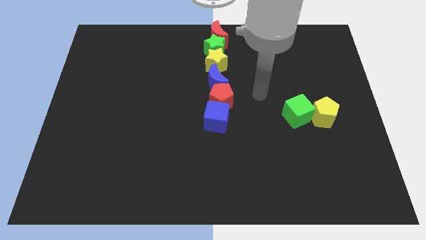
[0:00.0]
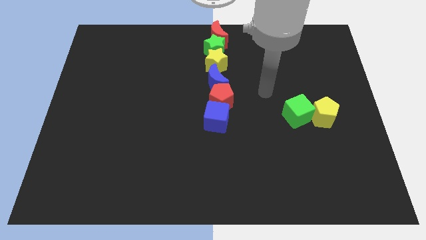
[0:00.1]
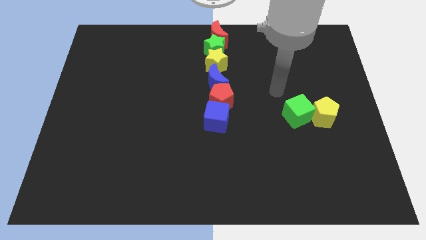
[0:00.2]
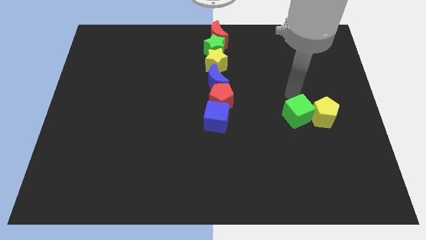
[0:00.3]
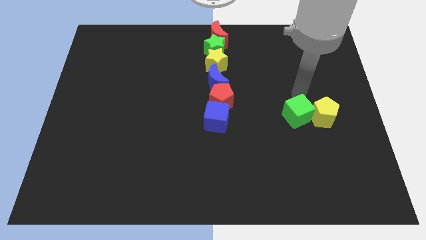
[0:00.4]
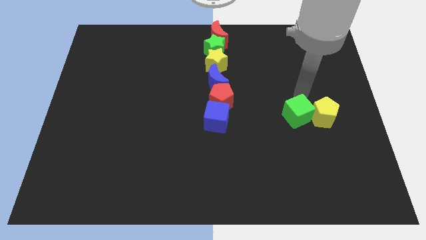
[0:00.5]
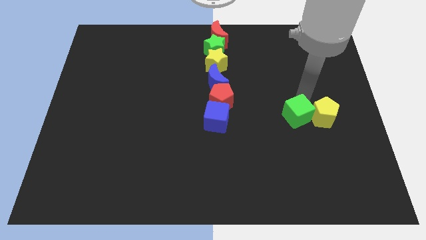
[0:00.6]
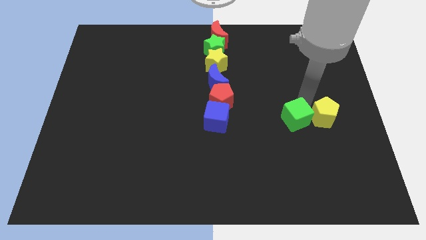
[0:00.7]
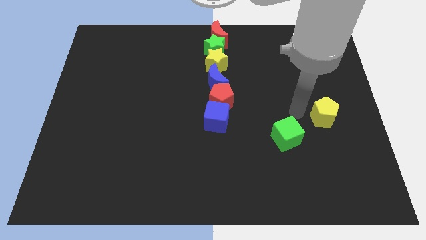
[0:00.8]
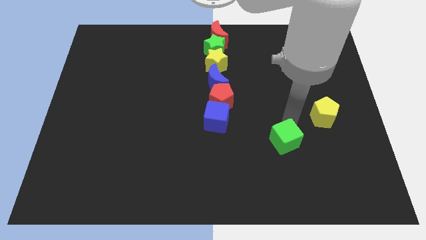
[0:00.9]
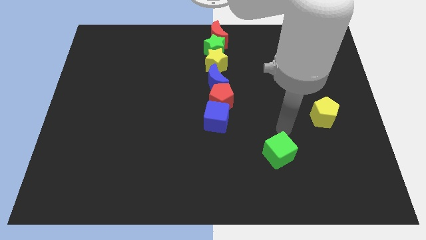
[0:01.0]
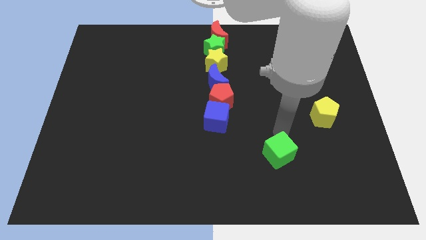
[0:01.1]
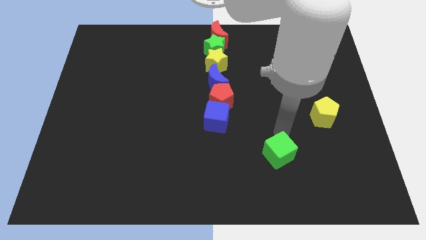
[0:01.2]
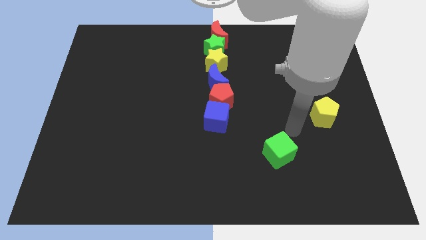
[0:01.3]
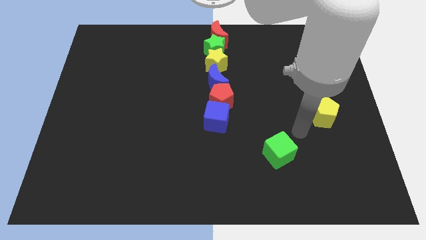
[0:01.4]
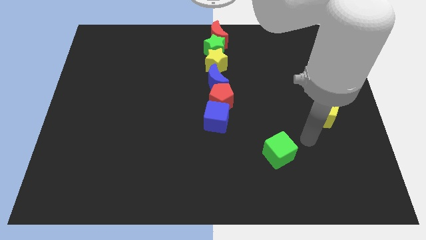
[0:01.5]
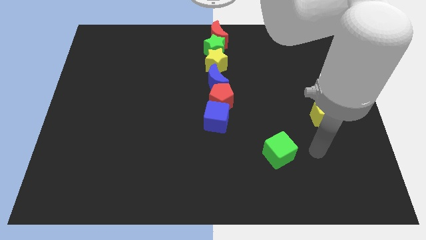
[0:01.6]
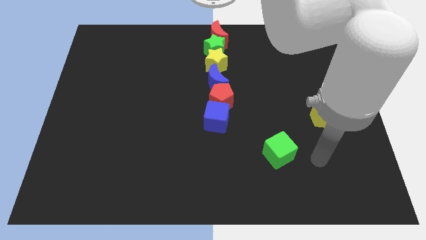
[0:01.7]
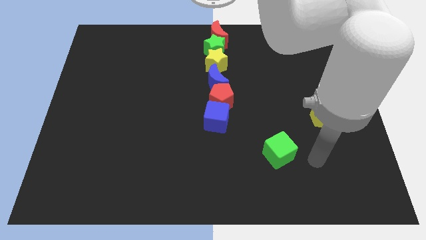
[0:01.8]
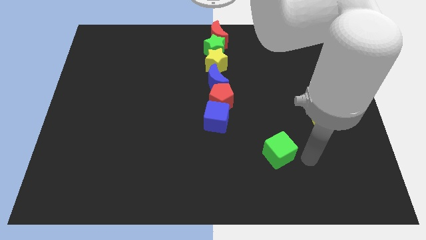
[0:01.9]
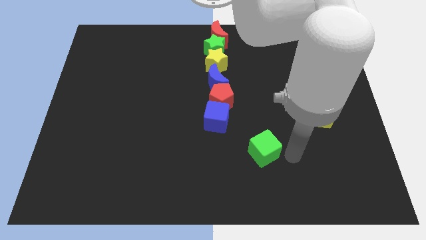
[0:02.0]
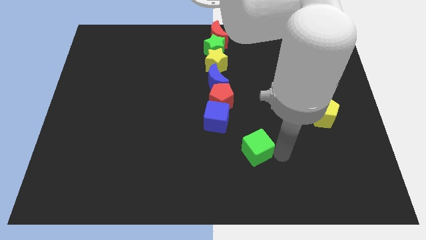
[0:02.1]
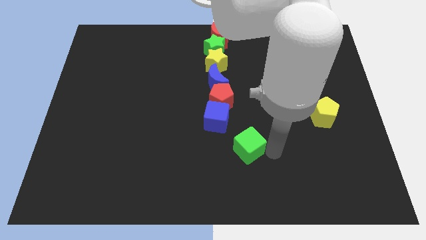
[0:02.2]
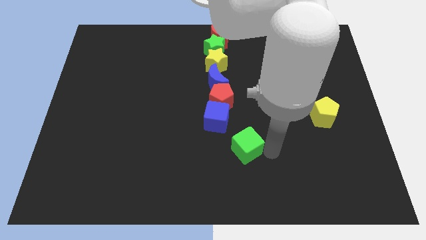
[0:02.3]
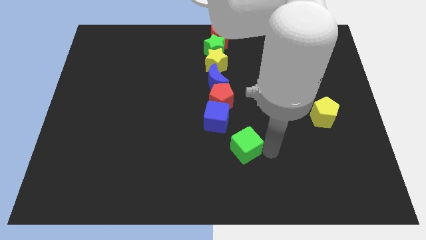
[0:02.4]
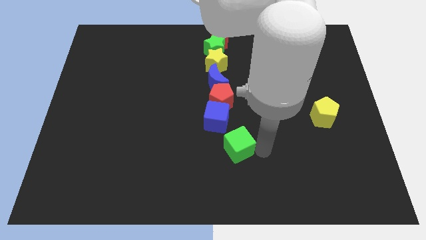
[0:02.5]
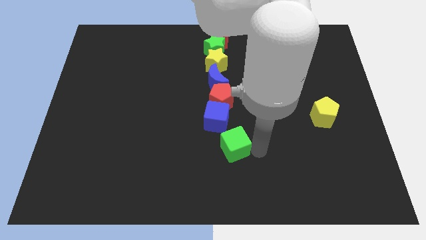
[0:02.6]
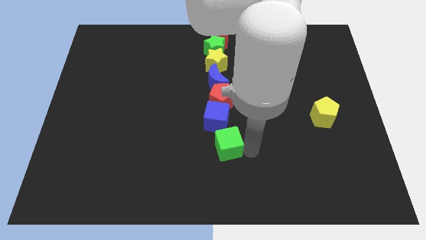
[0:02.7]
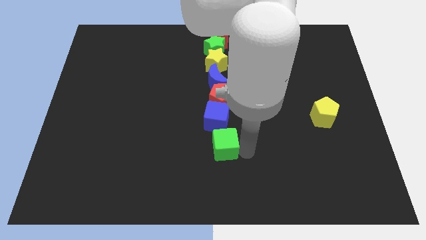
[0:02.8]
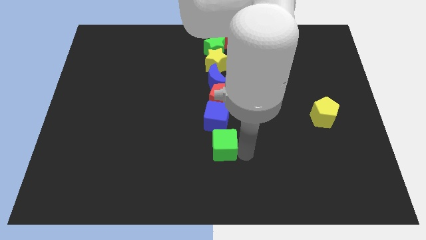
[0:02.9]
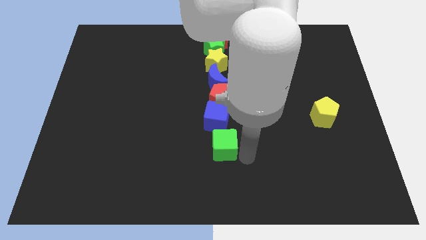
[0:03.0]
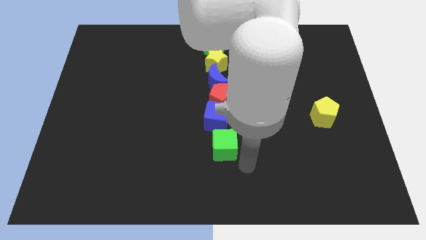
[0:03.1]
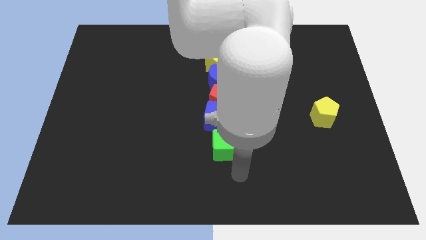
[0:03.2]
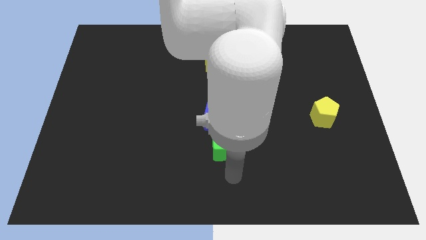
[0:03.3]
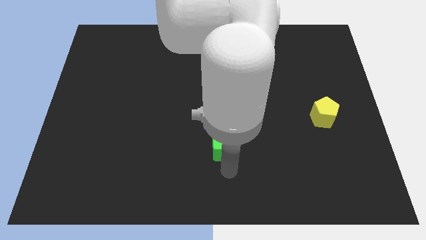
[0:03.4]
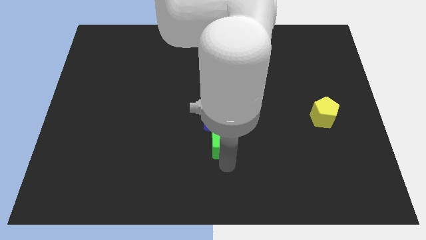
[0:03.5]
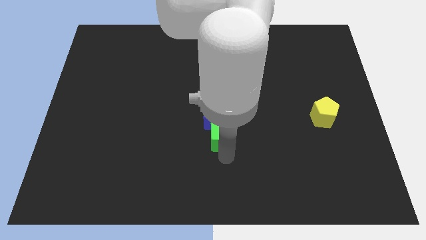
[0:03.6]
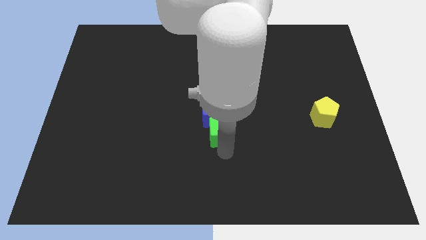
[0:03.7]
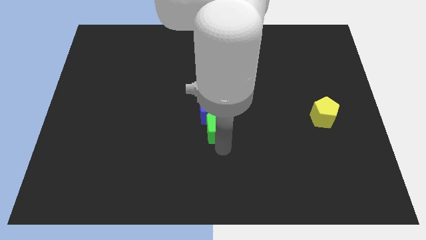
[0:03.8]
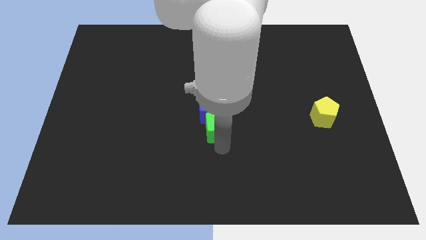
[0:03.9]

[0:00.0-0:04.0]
move the green cube into the blue cube

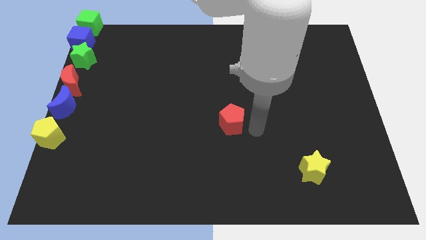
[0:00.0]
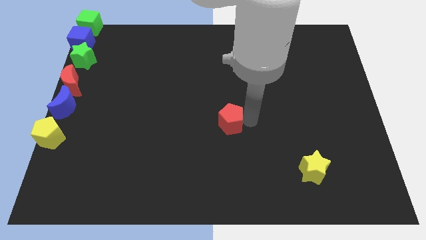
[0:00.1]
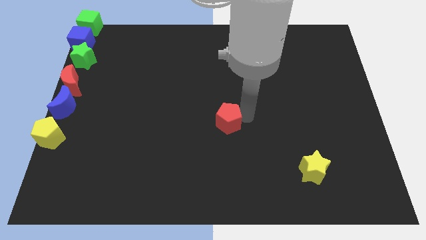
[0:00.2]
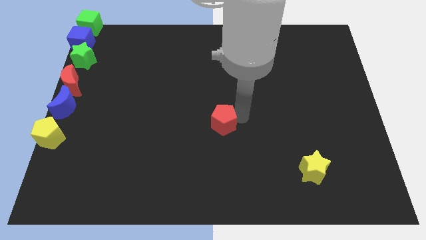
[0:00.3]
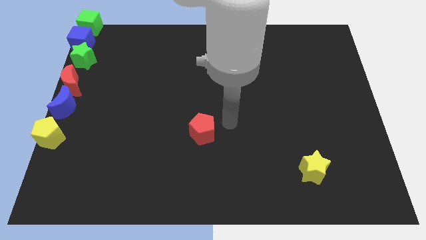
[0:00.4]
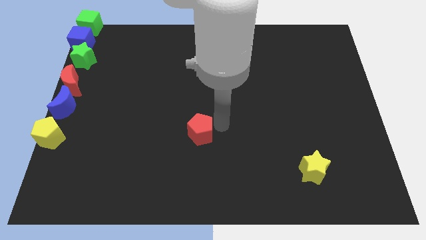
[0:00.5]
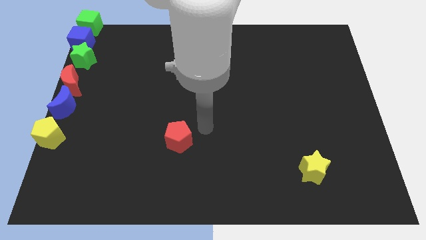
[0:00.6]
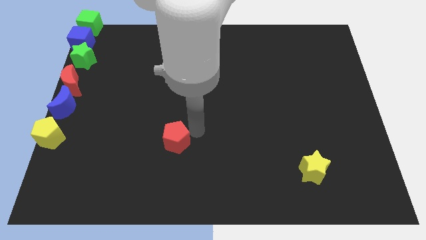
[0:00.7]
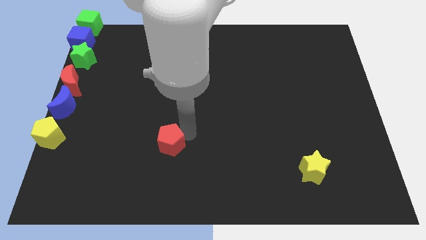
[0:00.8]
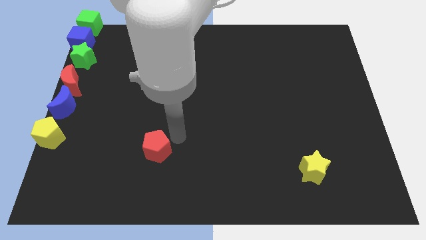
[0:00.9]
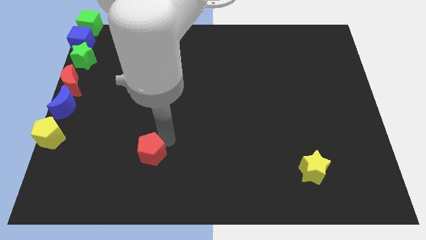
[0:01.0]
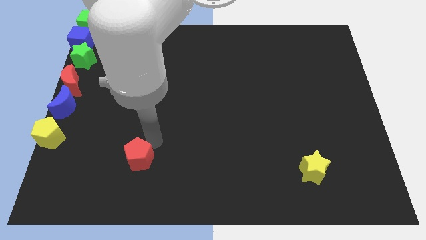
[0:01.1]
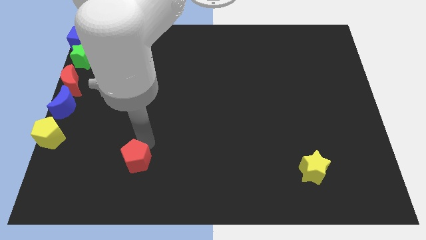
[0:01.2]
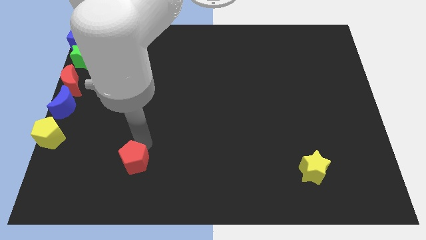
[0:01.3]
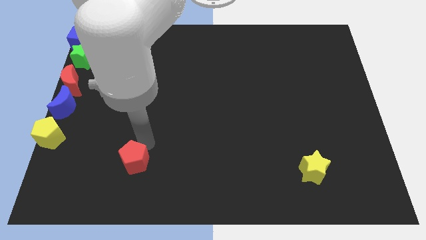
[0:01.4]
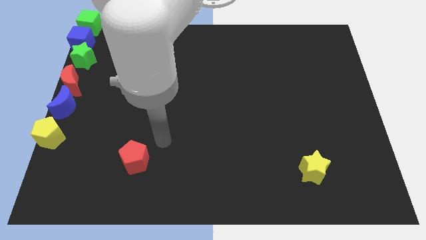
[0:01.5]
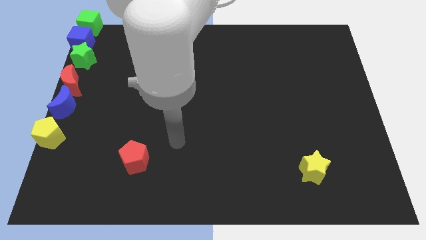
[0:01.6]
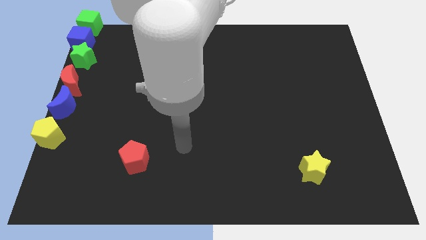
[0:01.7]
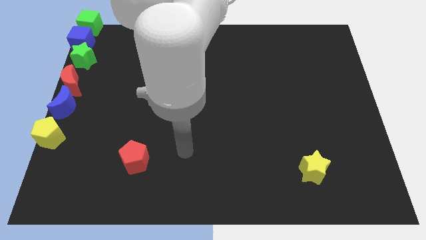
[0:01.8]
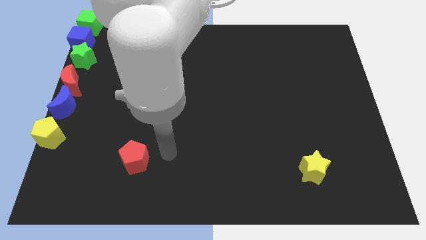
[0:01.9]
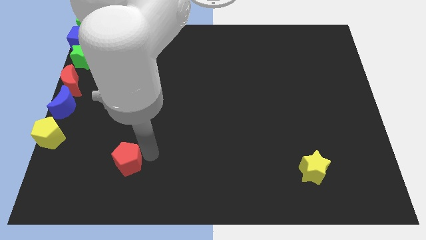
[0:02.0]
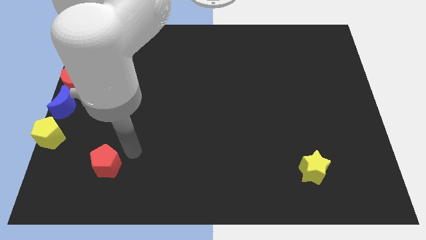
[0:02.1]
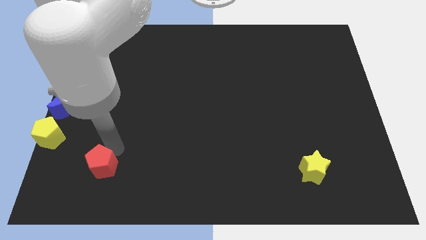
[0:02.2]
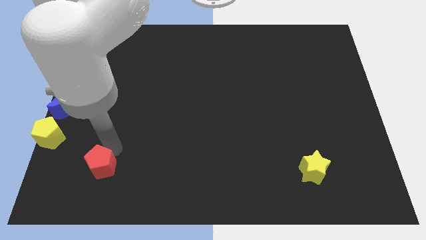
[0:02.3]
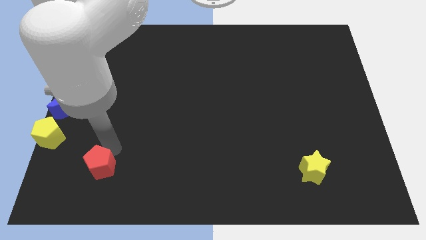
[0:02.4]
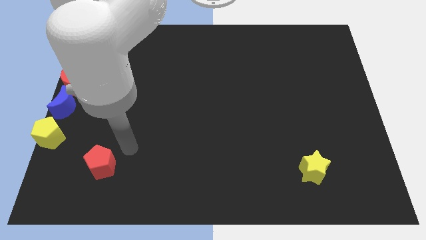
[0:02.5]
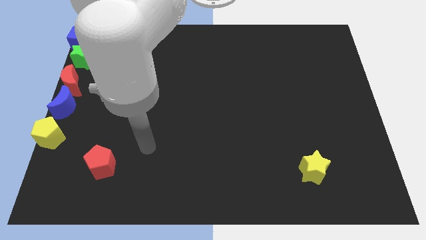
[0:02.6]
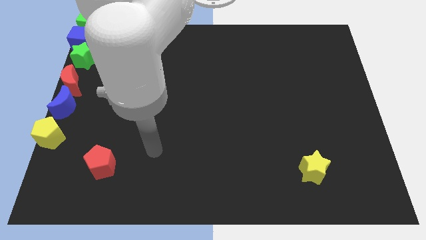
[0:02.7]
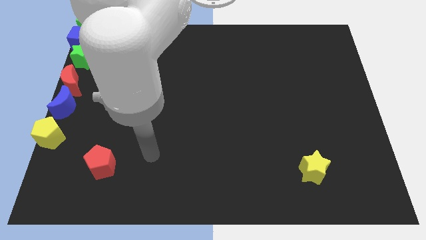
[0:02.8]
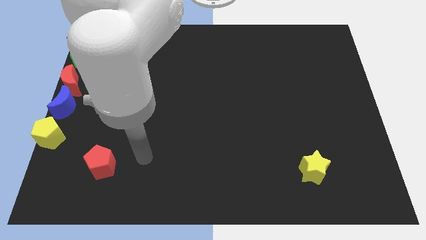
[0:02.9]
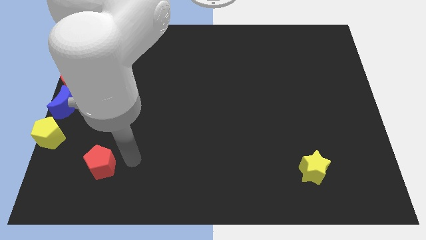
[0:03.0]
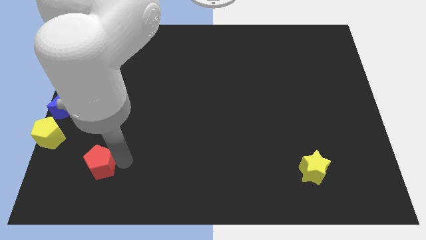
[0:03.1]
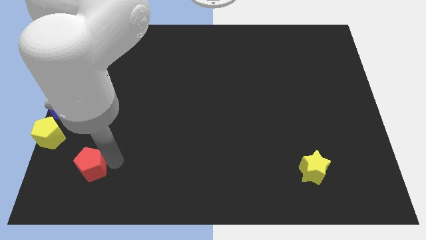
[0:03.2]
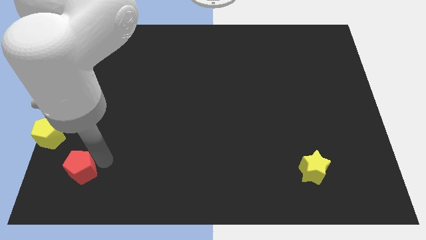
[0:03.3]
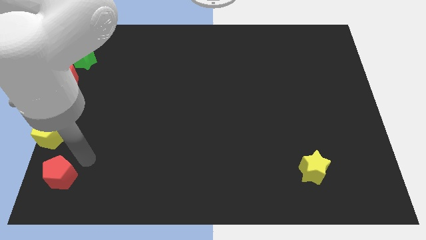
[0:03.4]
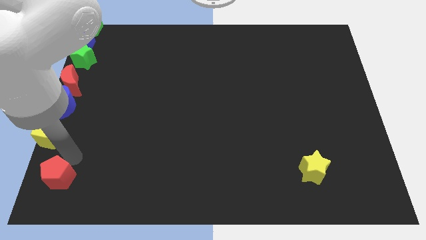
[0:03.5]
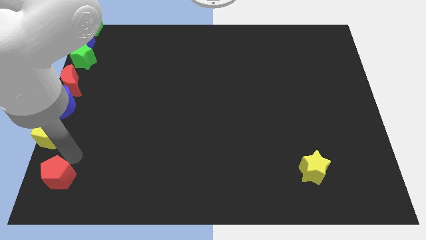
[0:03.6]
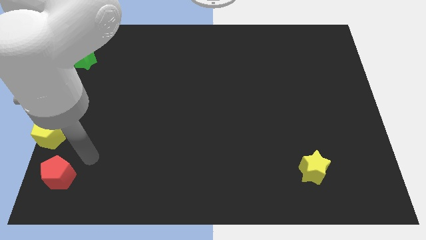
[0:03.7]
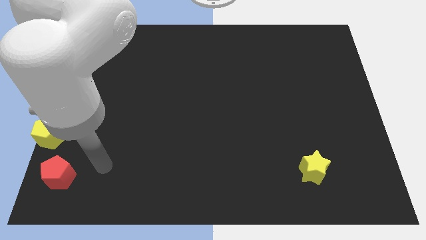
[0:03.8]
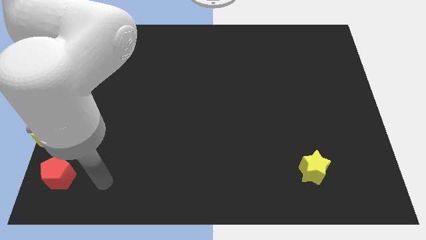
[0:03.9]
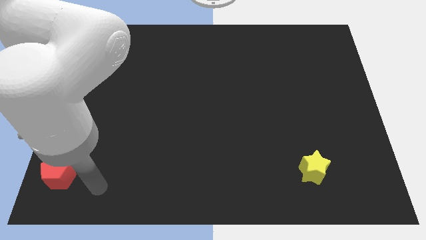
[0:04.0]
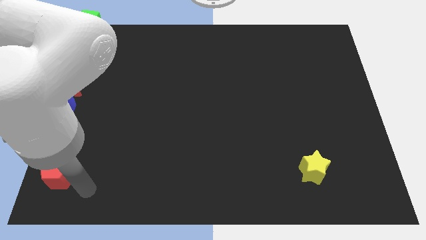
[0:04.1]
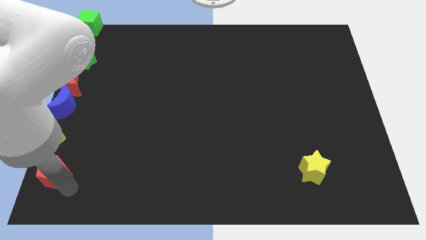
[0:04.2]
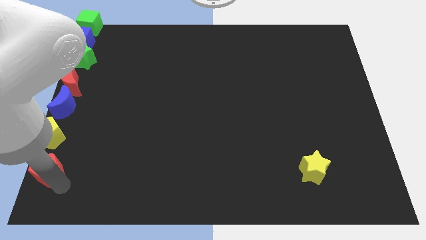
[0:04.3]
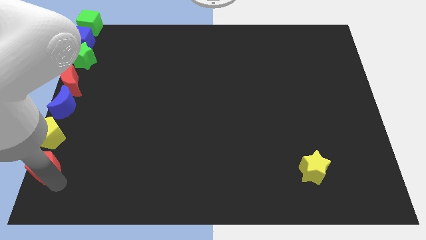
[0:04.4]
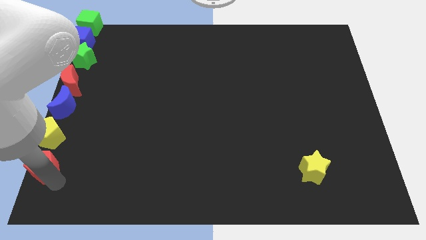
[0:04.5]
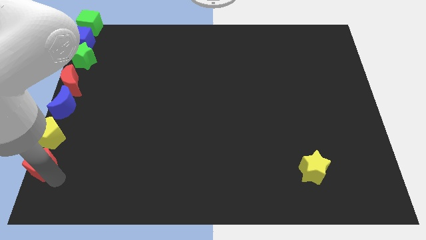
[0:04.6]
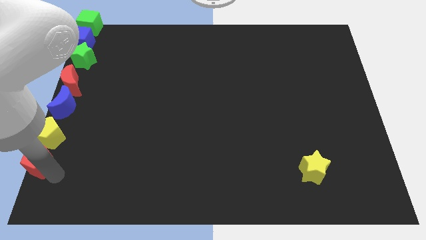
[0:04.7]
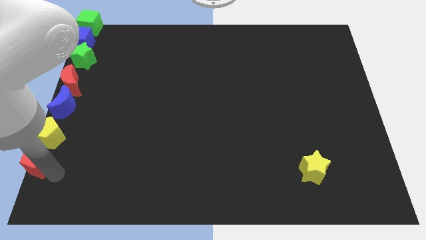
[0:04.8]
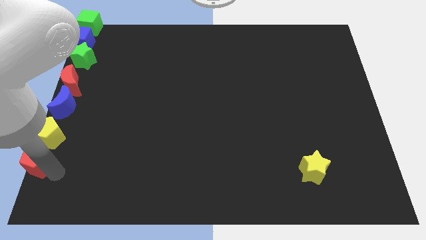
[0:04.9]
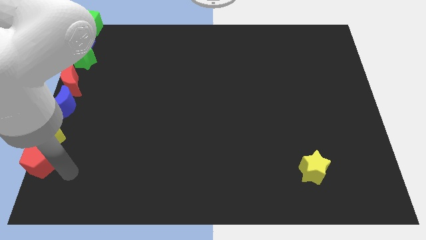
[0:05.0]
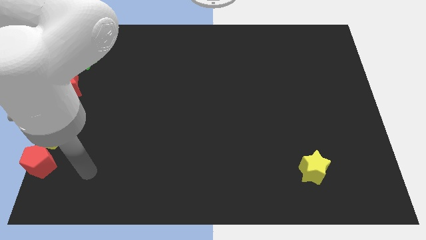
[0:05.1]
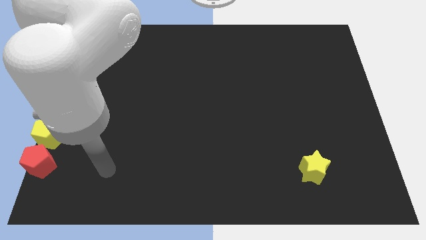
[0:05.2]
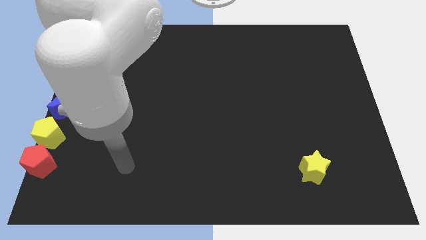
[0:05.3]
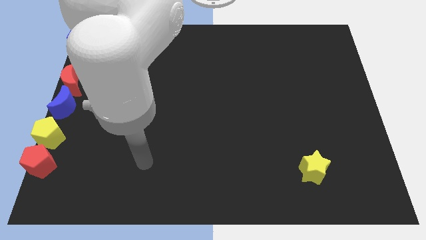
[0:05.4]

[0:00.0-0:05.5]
push the red pentagon to the bottom of the yellow pentagon
